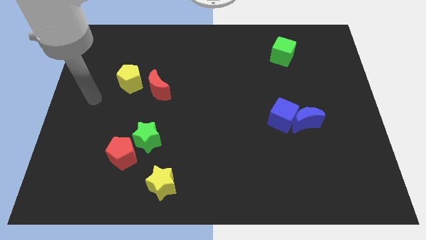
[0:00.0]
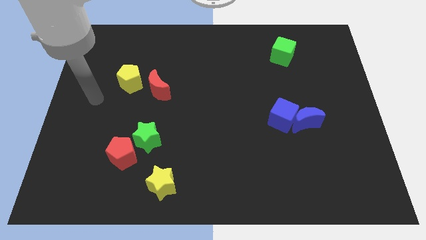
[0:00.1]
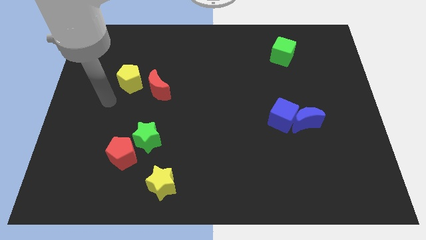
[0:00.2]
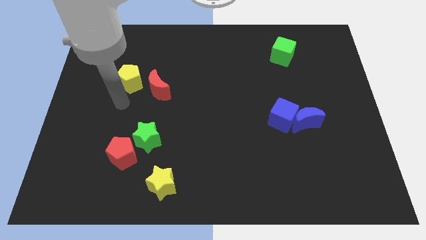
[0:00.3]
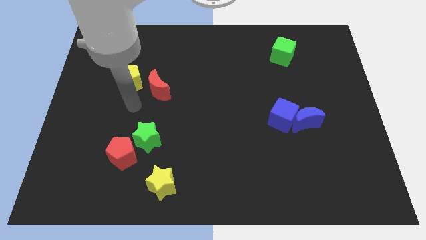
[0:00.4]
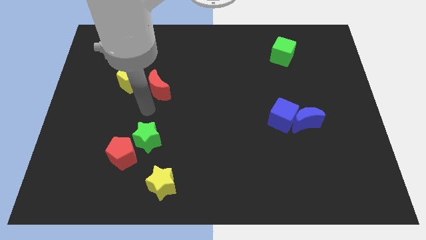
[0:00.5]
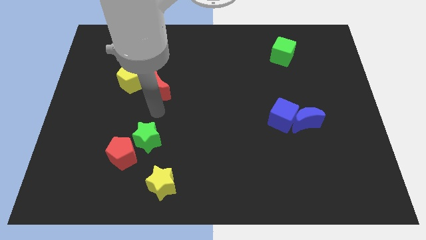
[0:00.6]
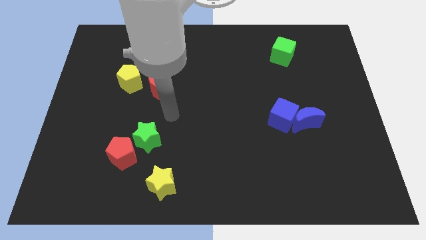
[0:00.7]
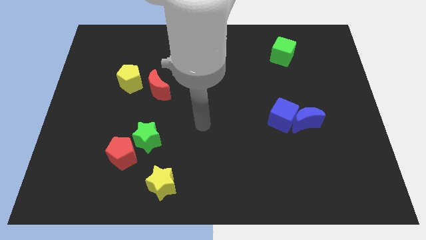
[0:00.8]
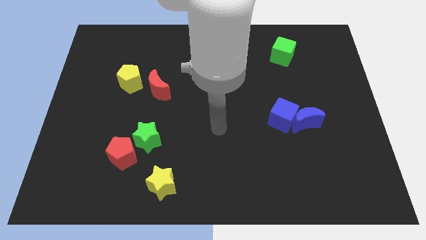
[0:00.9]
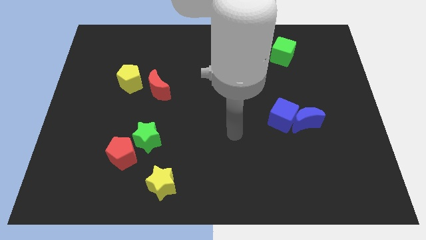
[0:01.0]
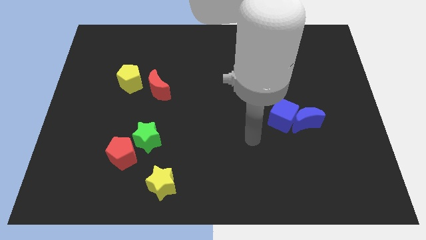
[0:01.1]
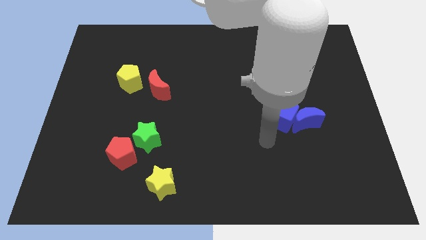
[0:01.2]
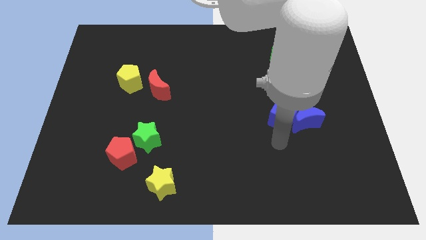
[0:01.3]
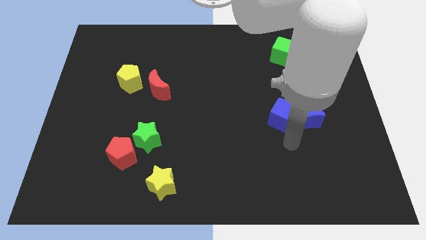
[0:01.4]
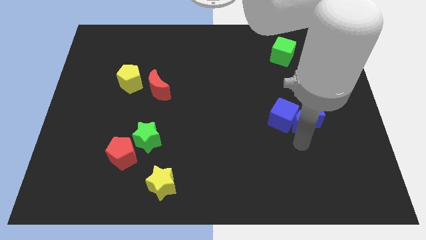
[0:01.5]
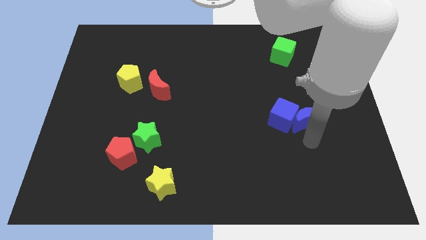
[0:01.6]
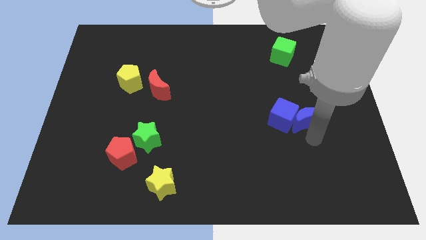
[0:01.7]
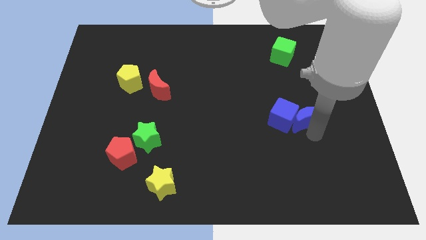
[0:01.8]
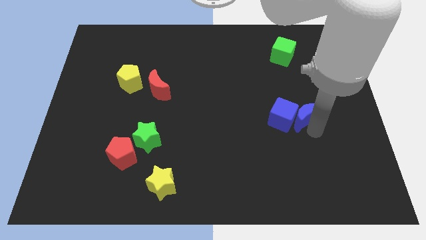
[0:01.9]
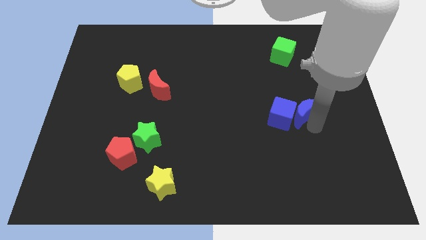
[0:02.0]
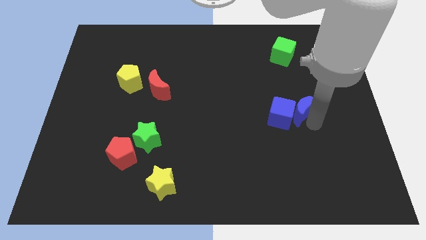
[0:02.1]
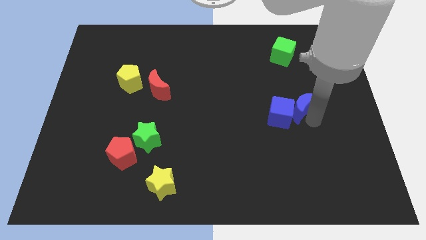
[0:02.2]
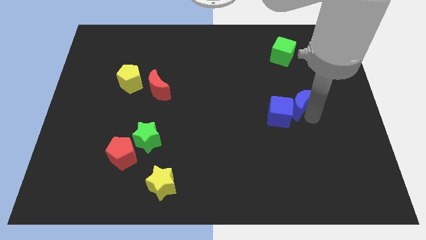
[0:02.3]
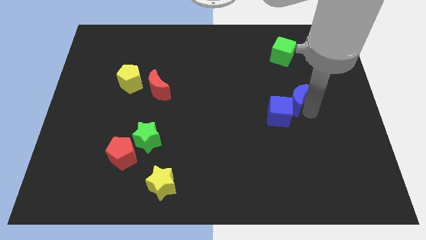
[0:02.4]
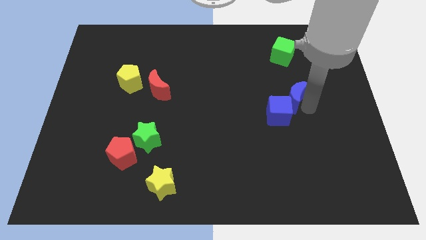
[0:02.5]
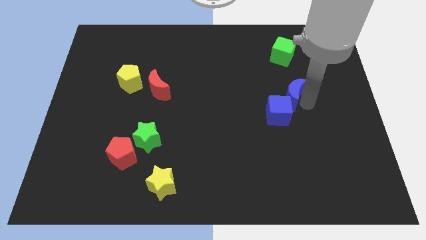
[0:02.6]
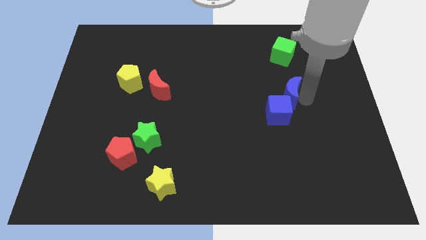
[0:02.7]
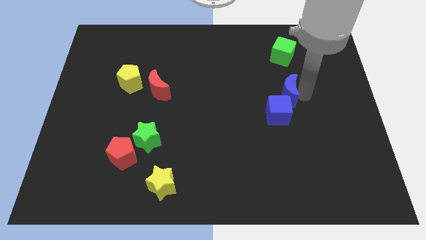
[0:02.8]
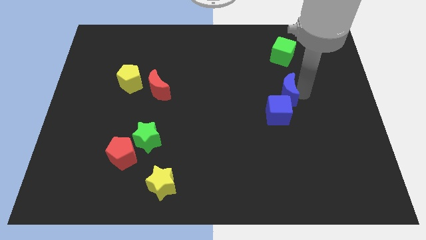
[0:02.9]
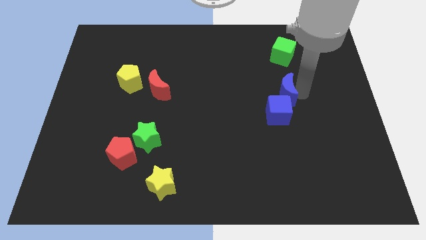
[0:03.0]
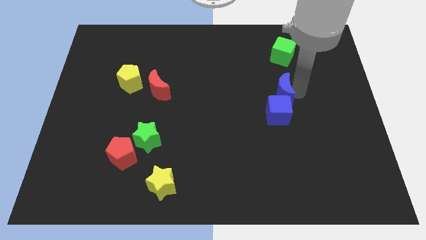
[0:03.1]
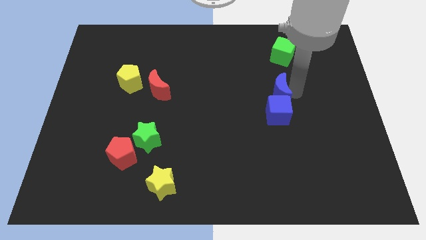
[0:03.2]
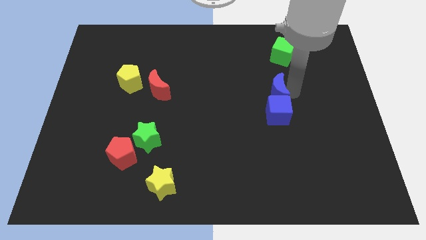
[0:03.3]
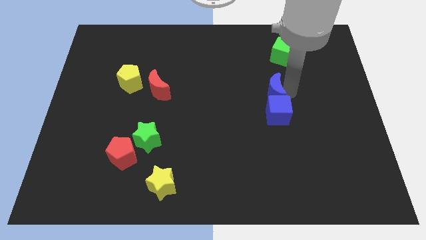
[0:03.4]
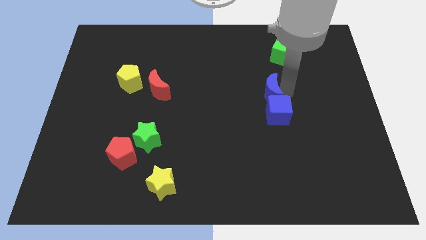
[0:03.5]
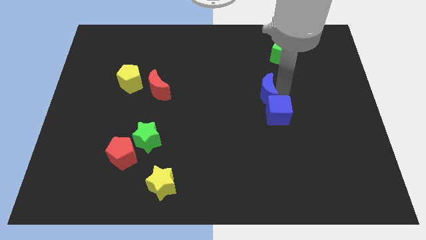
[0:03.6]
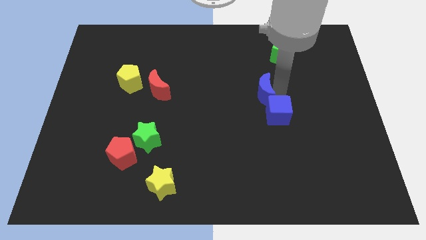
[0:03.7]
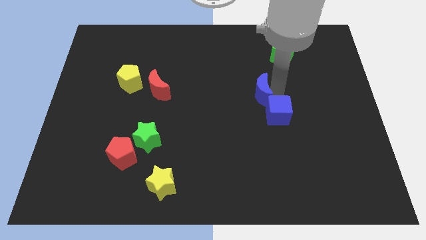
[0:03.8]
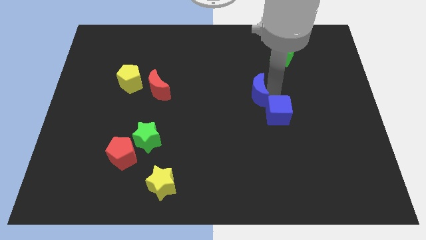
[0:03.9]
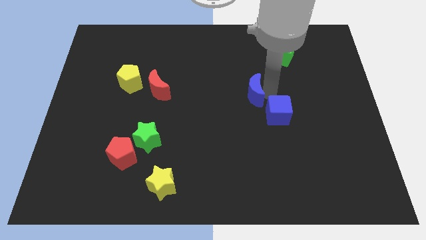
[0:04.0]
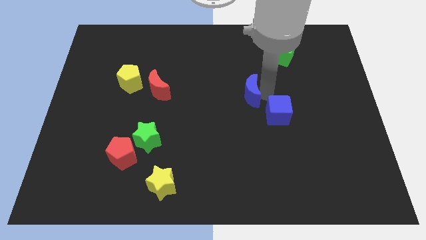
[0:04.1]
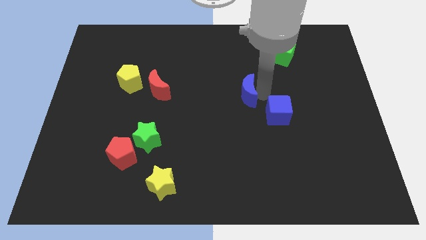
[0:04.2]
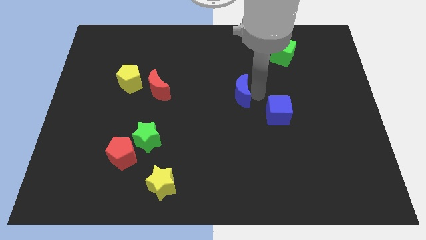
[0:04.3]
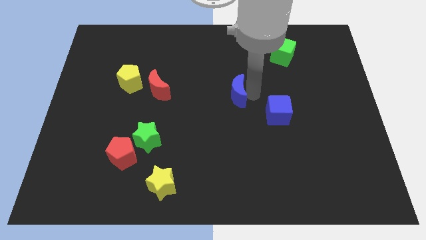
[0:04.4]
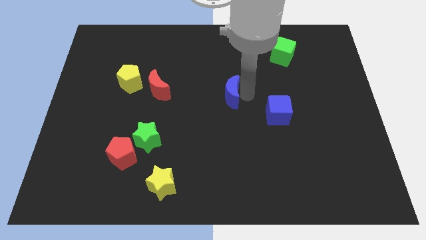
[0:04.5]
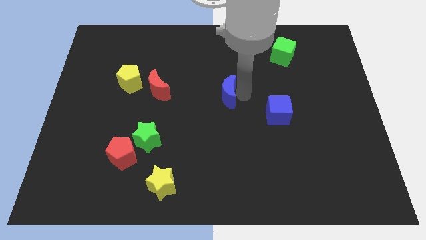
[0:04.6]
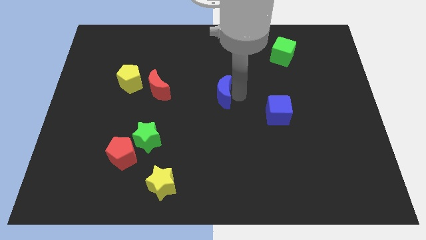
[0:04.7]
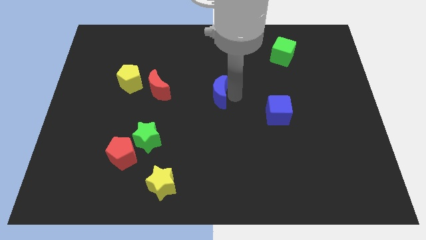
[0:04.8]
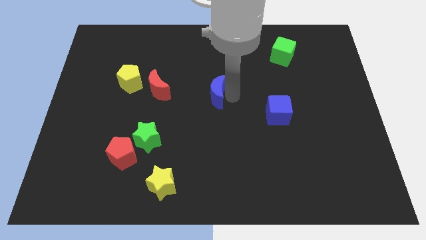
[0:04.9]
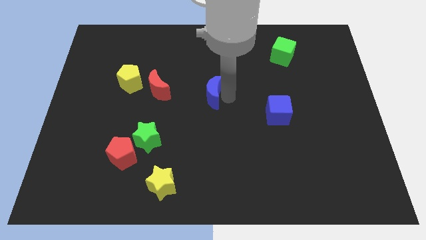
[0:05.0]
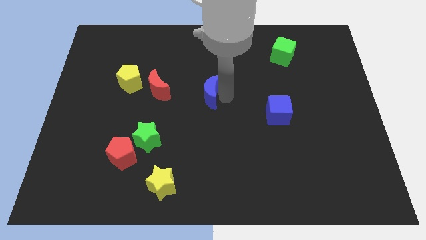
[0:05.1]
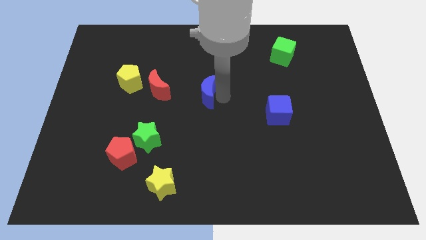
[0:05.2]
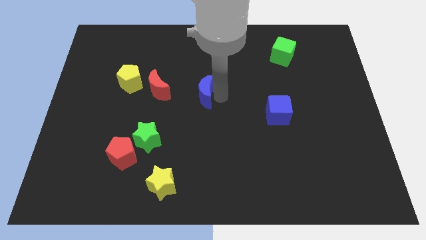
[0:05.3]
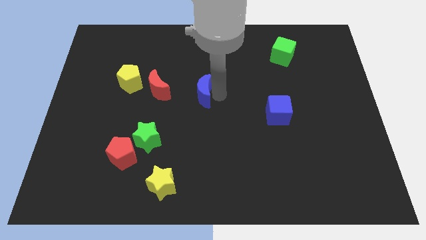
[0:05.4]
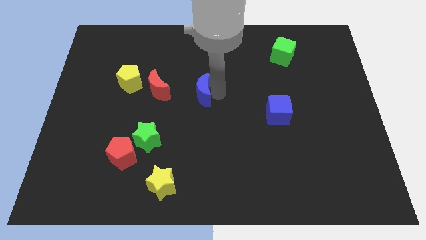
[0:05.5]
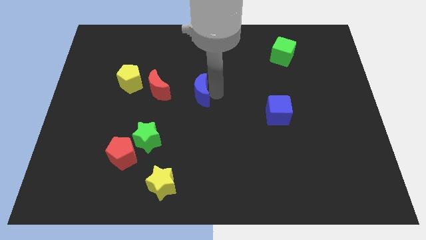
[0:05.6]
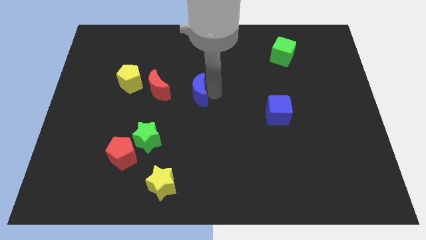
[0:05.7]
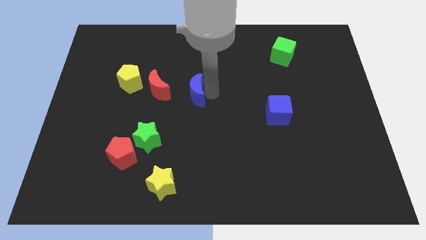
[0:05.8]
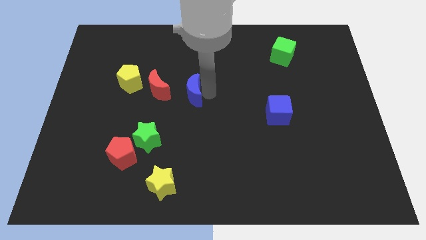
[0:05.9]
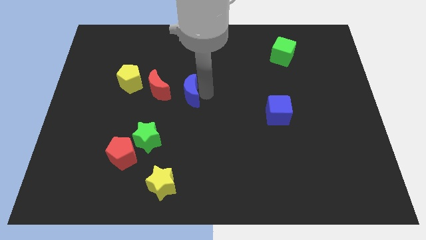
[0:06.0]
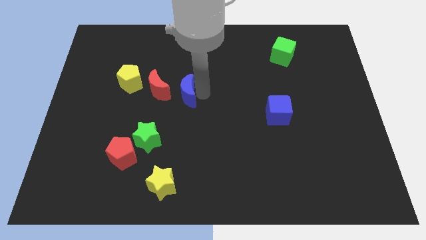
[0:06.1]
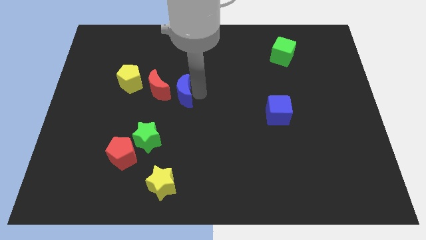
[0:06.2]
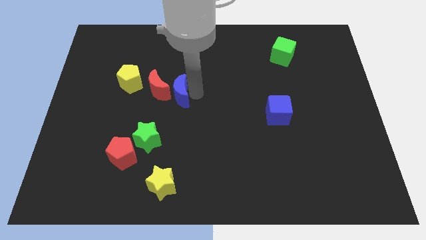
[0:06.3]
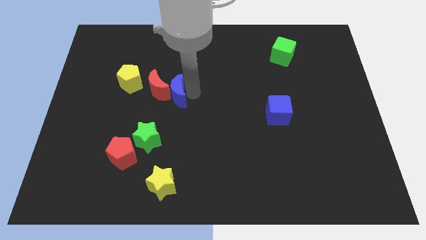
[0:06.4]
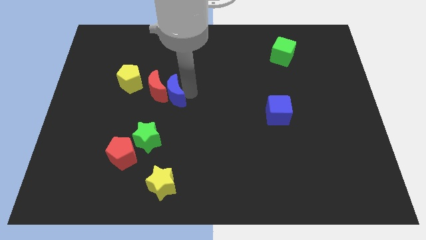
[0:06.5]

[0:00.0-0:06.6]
put the blue moon towards the red moon

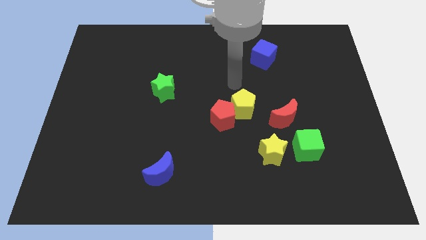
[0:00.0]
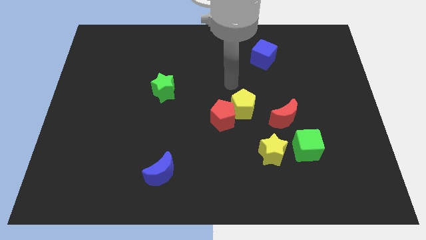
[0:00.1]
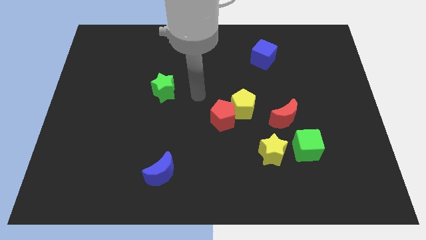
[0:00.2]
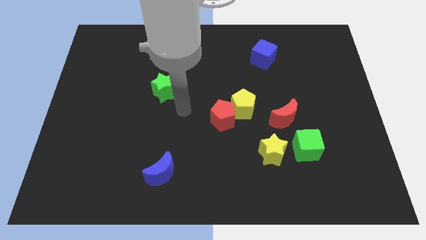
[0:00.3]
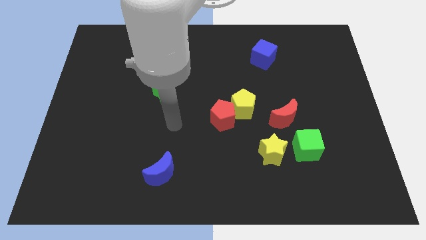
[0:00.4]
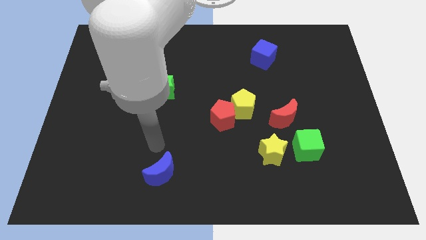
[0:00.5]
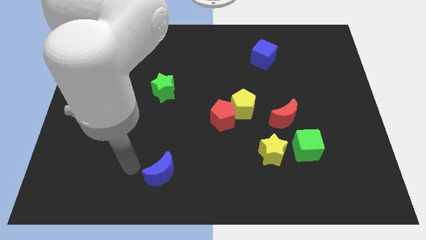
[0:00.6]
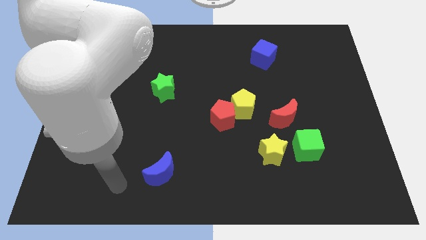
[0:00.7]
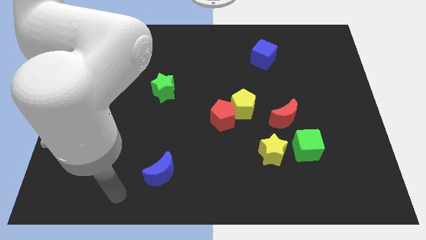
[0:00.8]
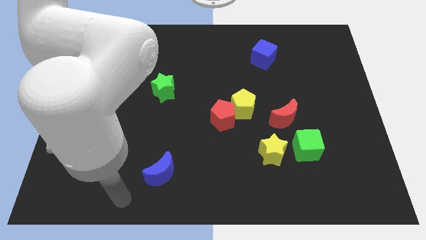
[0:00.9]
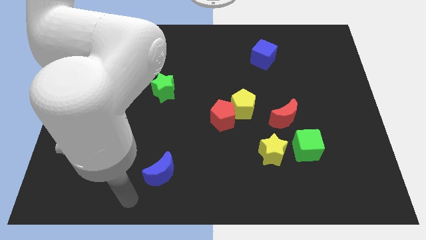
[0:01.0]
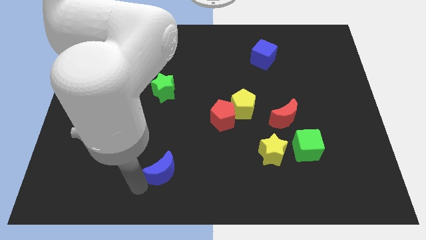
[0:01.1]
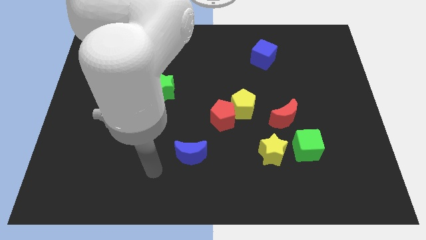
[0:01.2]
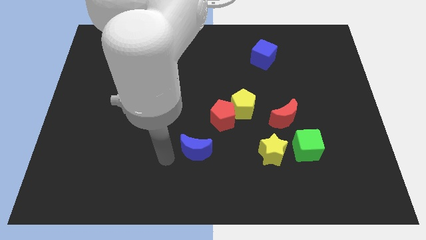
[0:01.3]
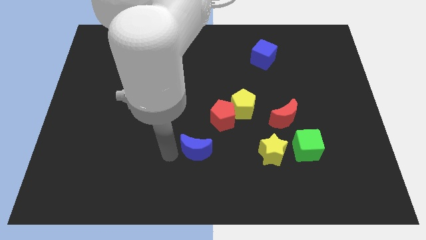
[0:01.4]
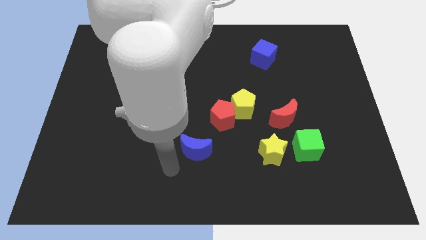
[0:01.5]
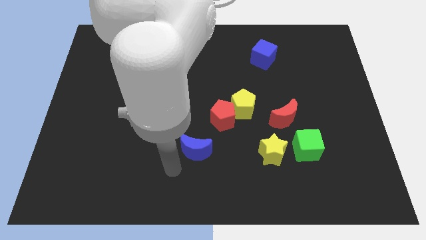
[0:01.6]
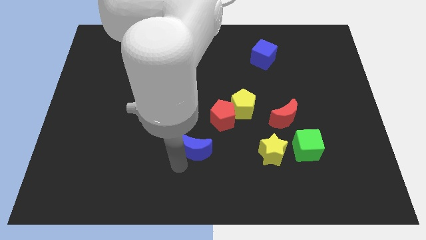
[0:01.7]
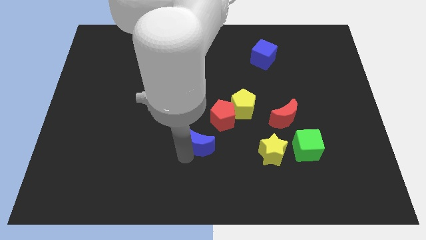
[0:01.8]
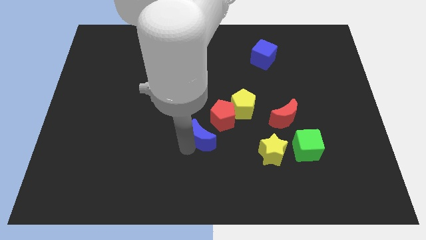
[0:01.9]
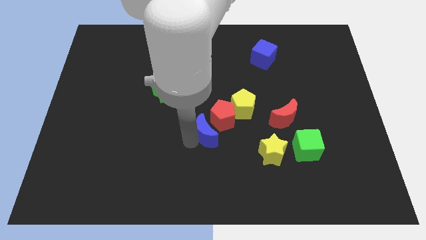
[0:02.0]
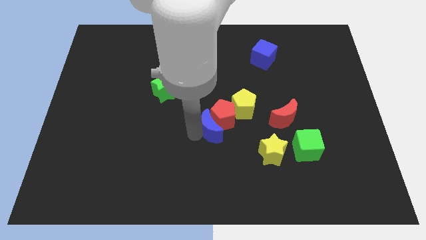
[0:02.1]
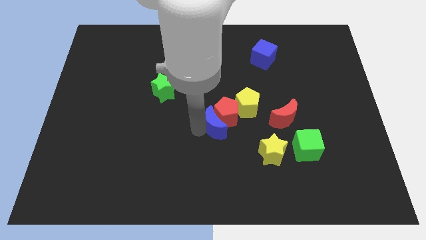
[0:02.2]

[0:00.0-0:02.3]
put the blue moon next to the red pentagon
